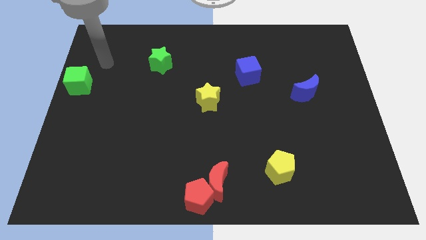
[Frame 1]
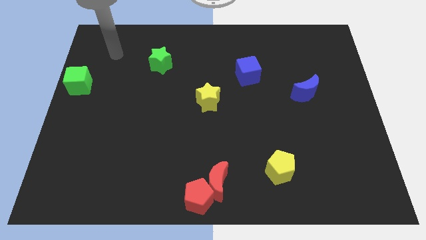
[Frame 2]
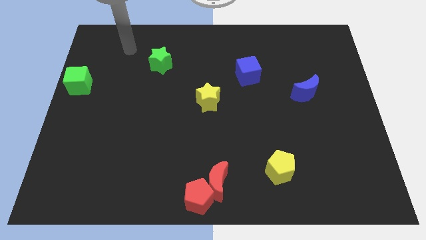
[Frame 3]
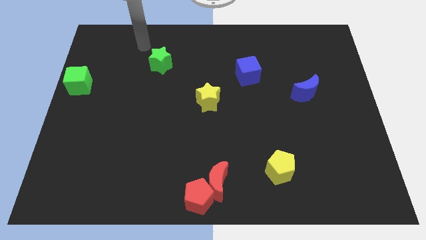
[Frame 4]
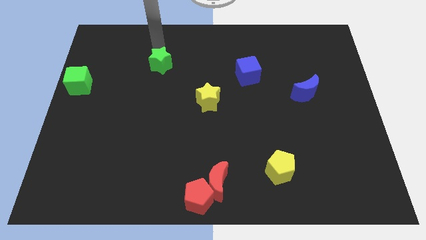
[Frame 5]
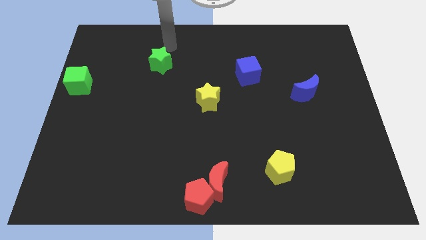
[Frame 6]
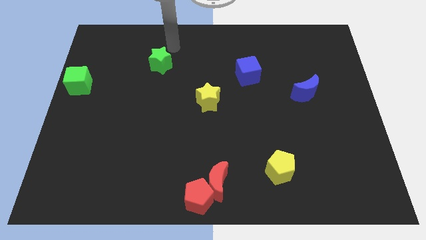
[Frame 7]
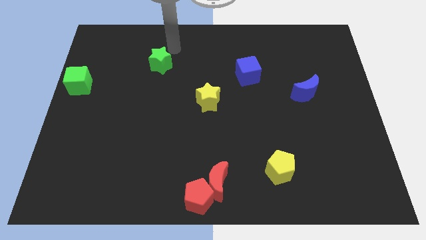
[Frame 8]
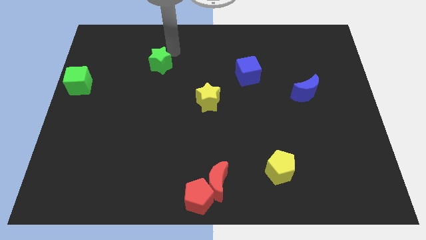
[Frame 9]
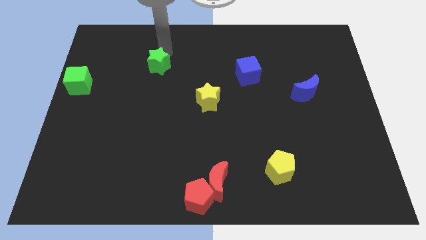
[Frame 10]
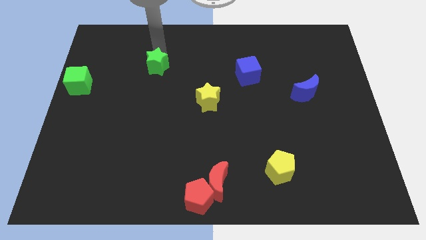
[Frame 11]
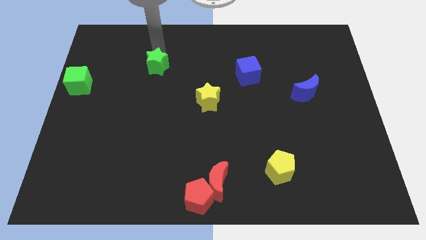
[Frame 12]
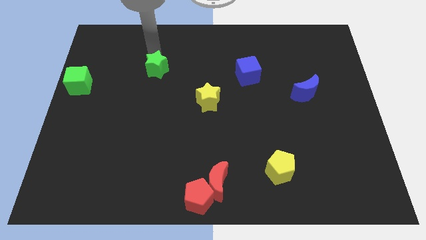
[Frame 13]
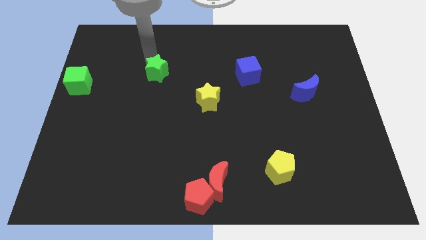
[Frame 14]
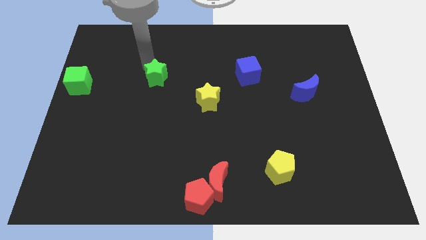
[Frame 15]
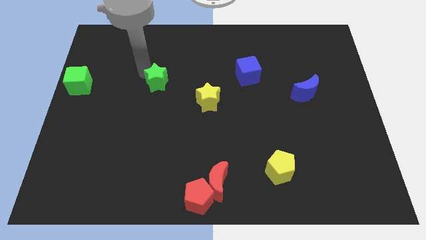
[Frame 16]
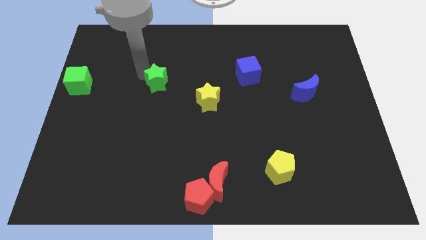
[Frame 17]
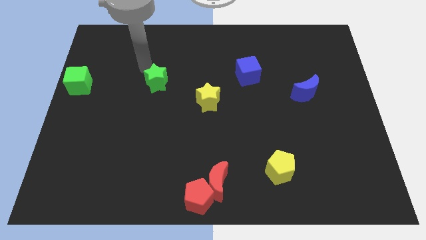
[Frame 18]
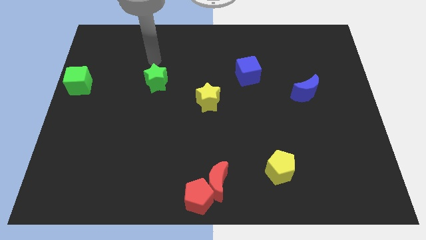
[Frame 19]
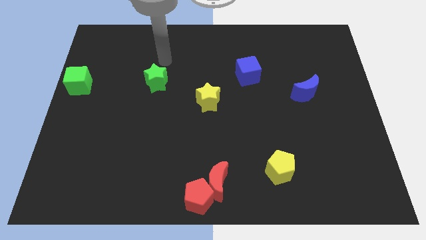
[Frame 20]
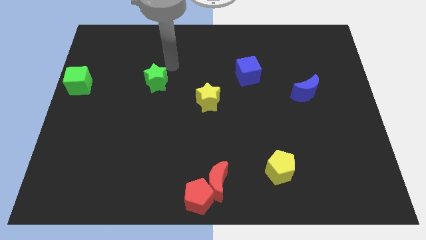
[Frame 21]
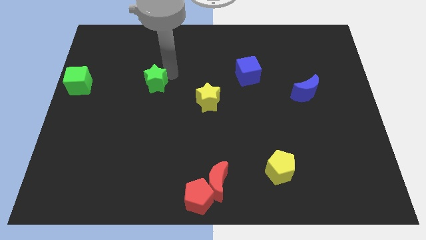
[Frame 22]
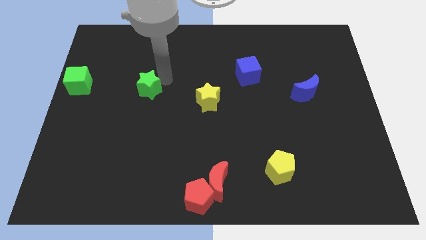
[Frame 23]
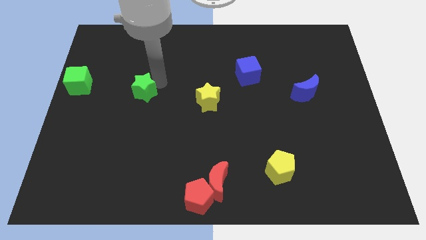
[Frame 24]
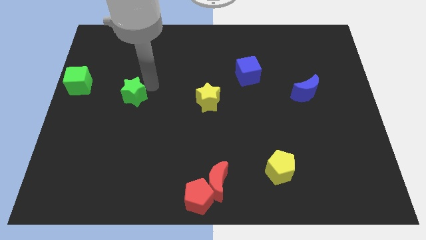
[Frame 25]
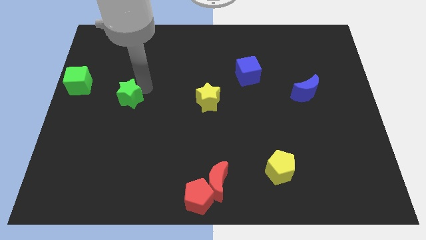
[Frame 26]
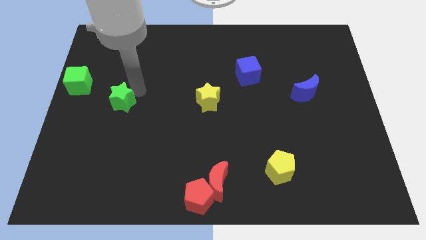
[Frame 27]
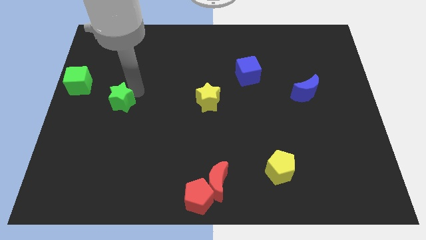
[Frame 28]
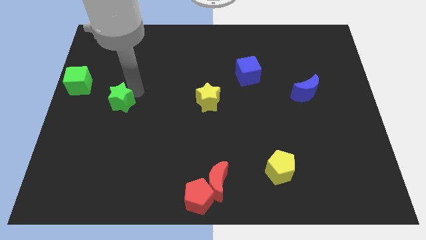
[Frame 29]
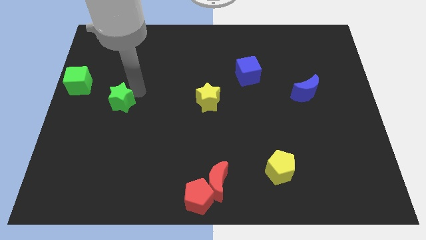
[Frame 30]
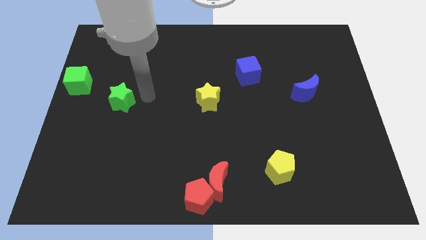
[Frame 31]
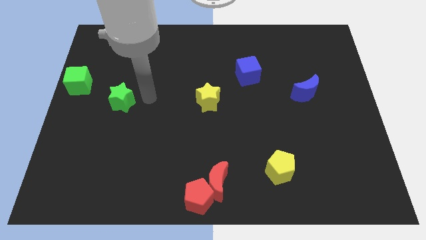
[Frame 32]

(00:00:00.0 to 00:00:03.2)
drag the green star diagonally to the bottom right of the green cube

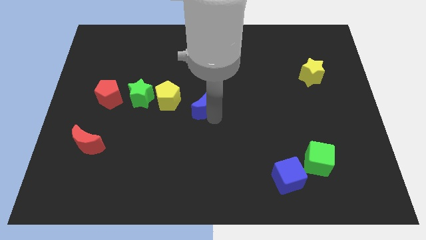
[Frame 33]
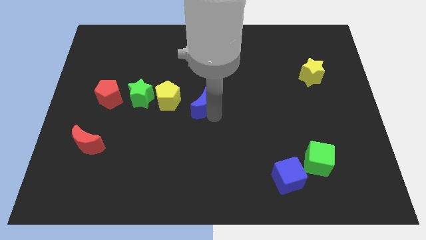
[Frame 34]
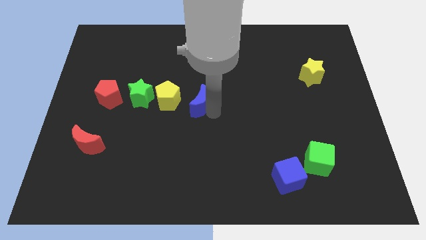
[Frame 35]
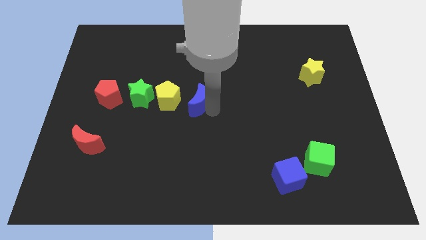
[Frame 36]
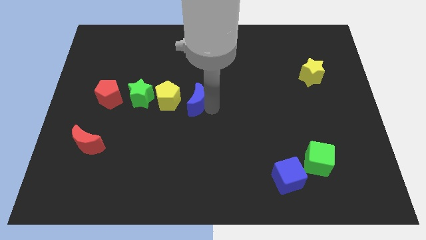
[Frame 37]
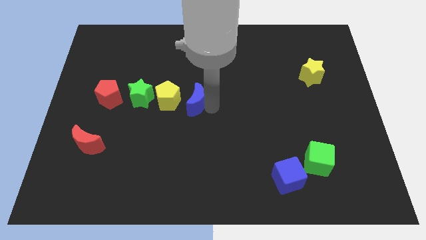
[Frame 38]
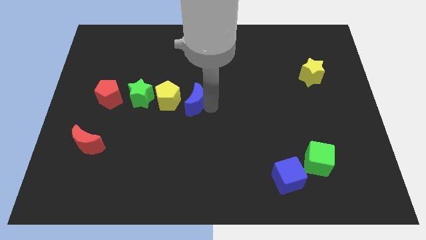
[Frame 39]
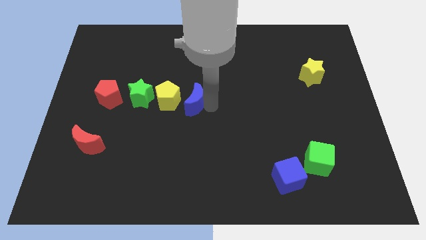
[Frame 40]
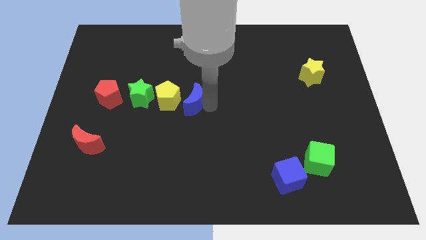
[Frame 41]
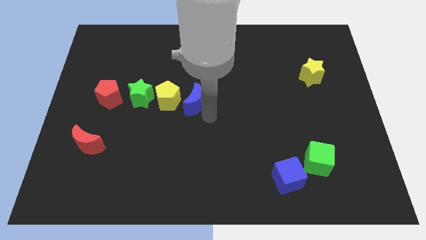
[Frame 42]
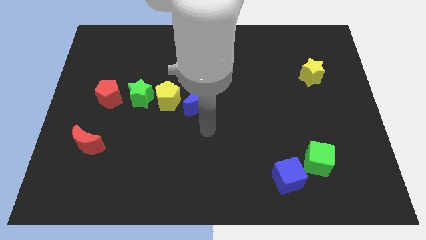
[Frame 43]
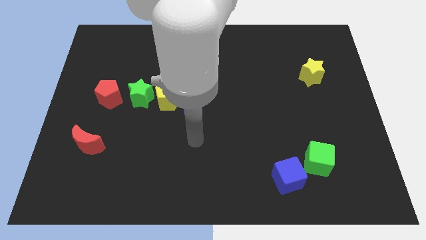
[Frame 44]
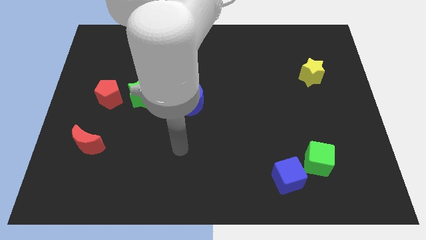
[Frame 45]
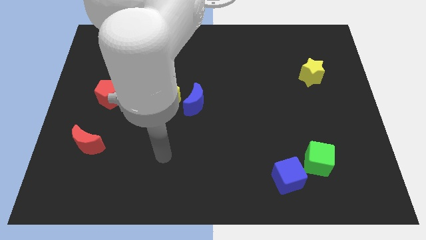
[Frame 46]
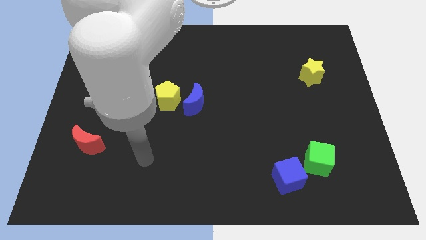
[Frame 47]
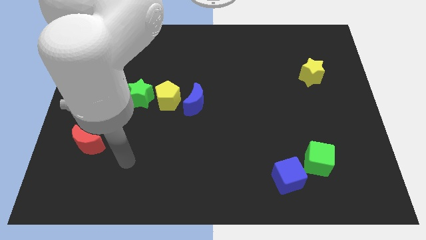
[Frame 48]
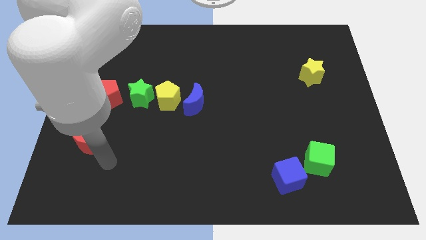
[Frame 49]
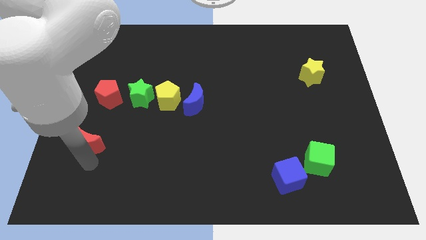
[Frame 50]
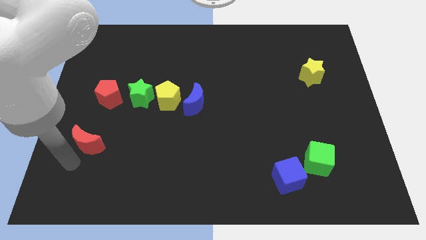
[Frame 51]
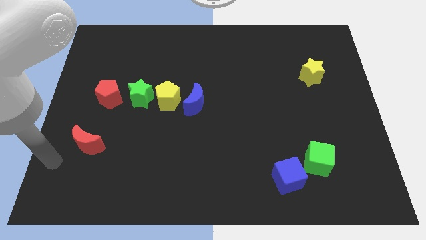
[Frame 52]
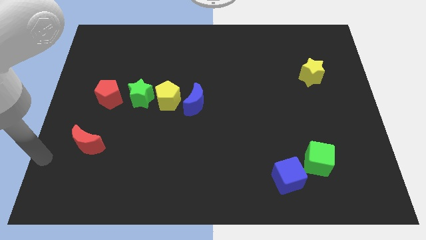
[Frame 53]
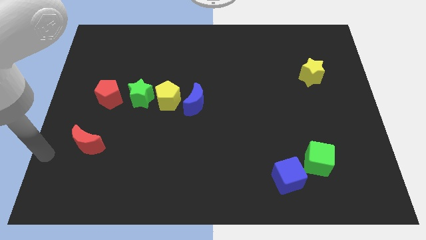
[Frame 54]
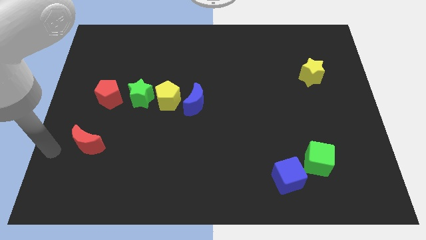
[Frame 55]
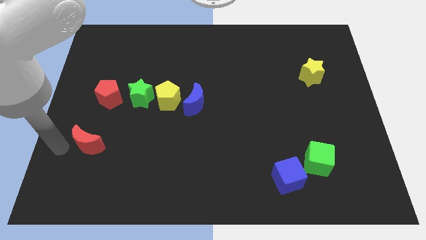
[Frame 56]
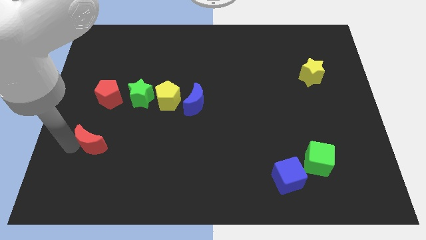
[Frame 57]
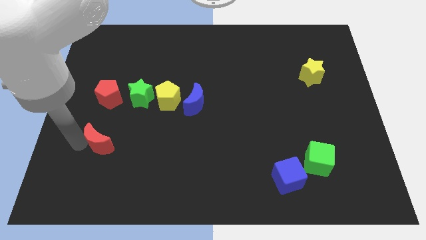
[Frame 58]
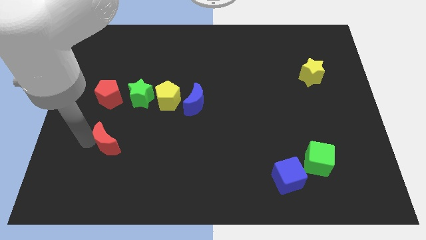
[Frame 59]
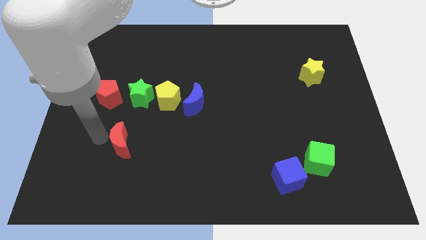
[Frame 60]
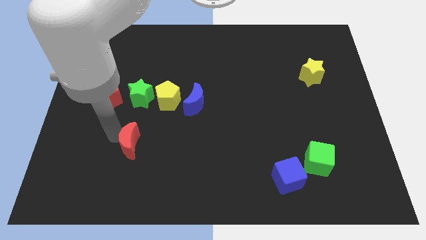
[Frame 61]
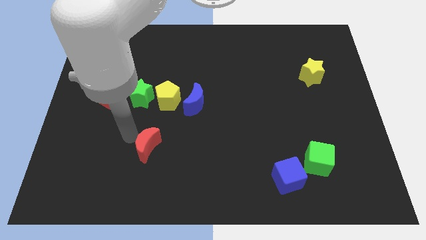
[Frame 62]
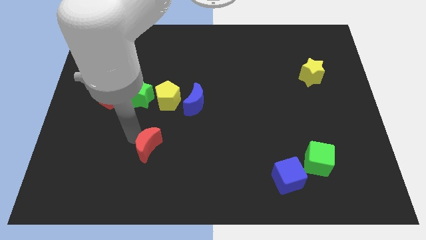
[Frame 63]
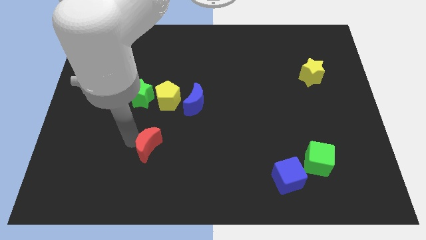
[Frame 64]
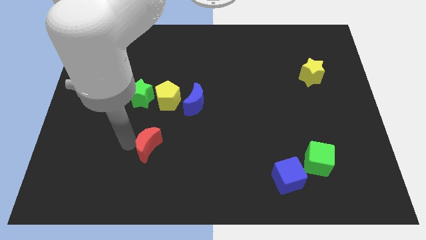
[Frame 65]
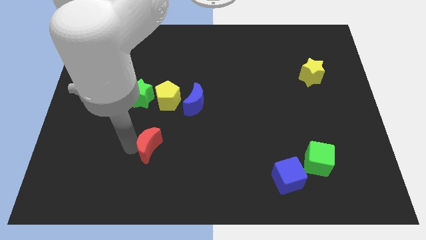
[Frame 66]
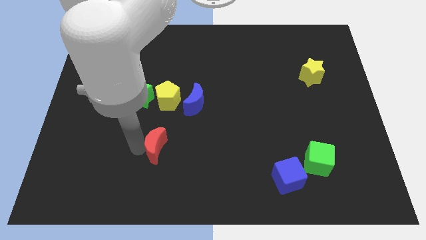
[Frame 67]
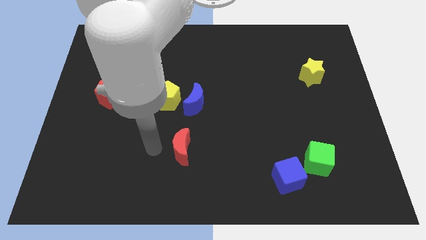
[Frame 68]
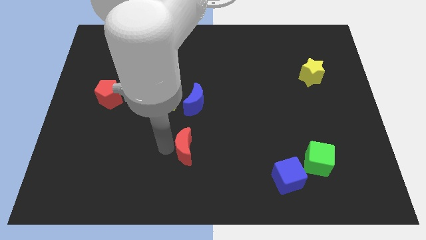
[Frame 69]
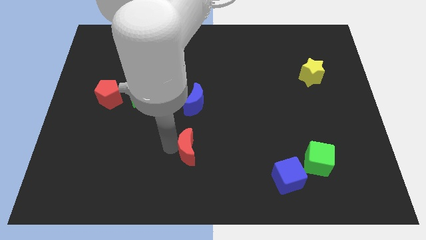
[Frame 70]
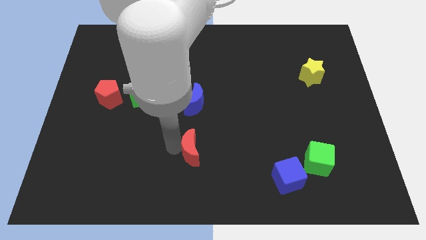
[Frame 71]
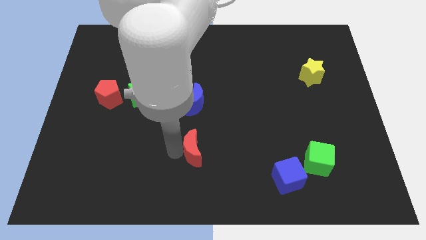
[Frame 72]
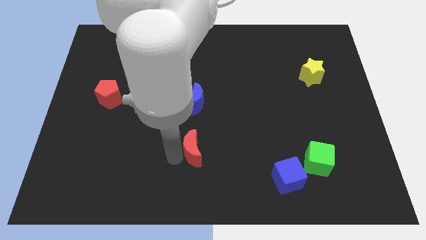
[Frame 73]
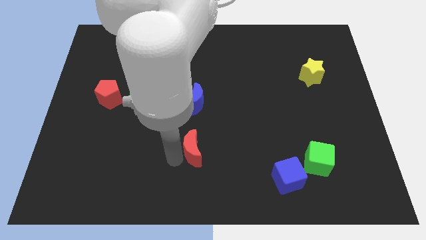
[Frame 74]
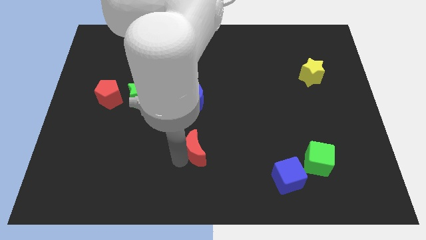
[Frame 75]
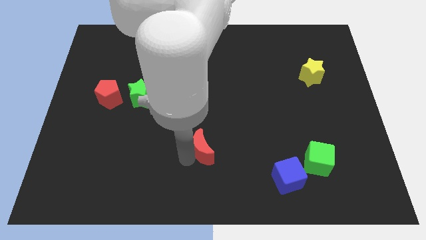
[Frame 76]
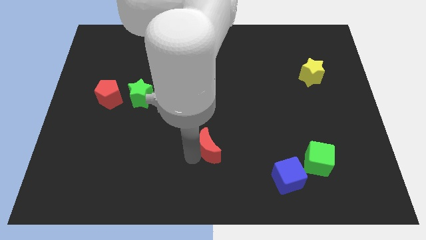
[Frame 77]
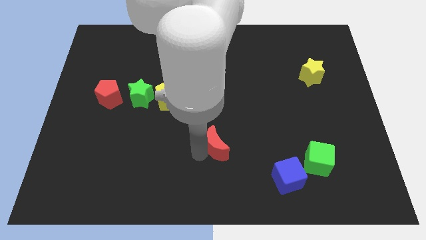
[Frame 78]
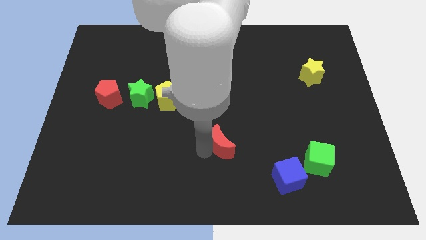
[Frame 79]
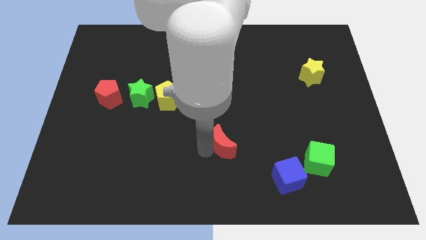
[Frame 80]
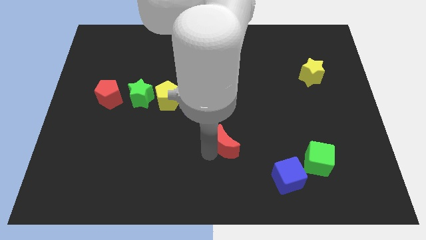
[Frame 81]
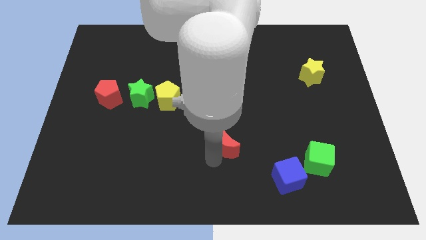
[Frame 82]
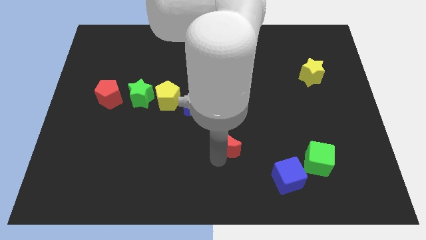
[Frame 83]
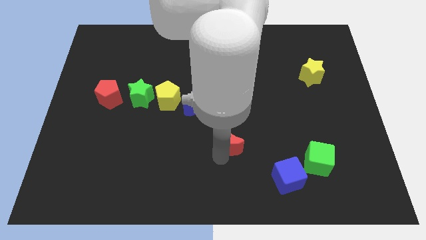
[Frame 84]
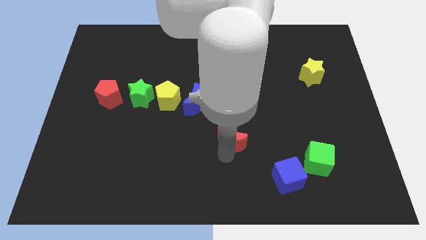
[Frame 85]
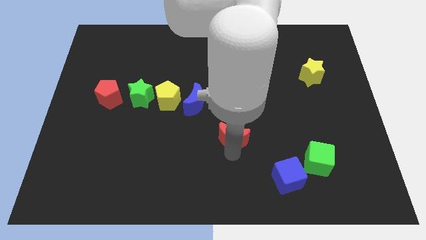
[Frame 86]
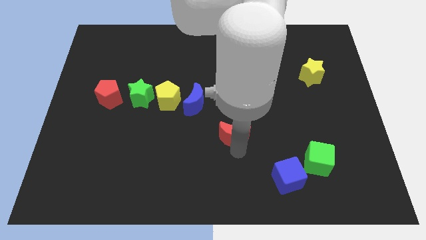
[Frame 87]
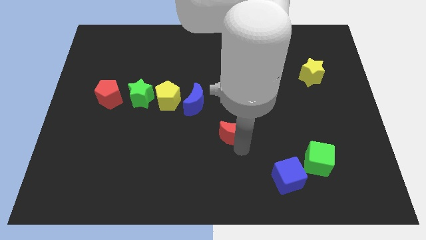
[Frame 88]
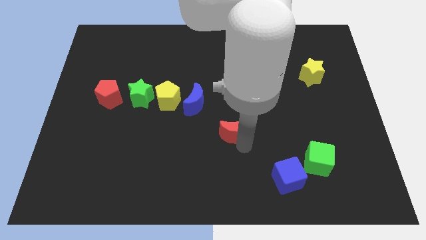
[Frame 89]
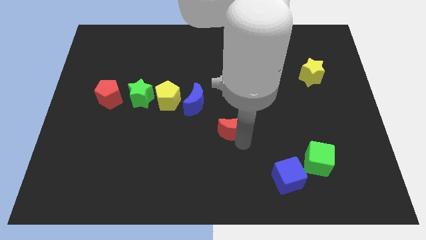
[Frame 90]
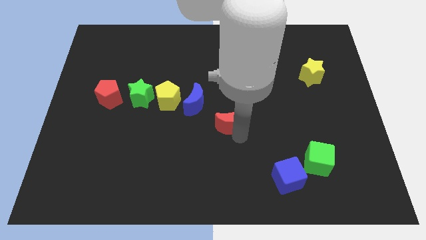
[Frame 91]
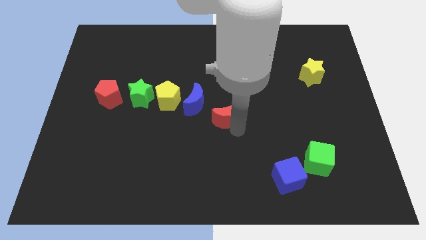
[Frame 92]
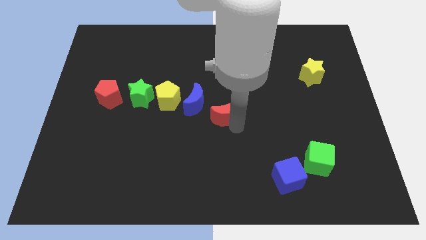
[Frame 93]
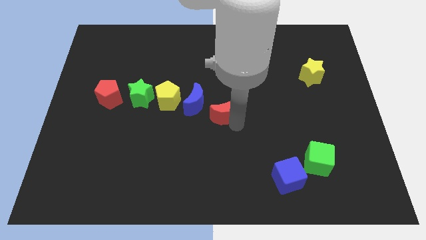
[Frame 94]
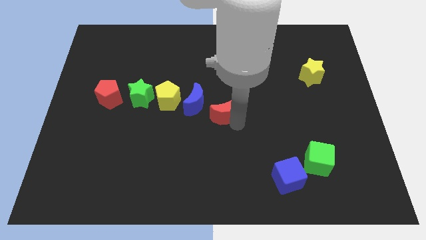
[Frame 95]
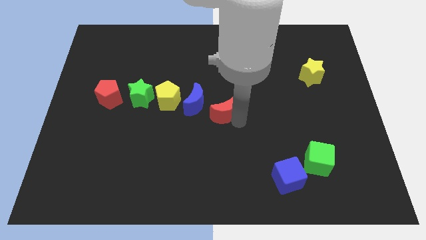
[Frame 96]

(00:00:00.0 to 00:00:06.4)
move the red moon to the horizontal line
